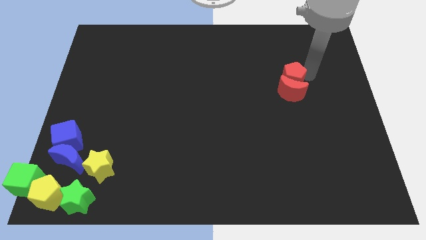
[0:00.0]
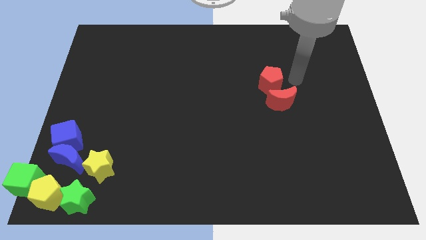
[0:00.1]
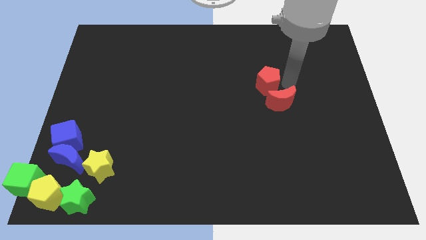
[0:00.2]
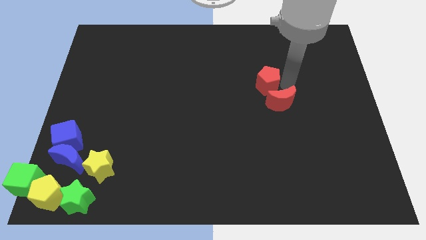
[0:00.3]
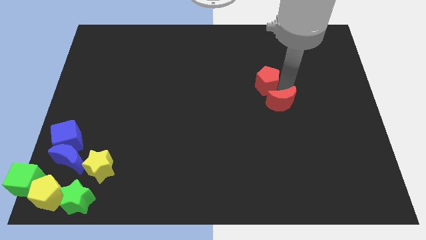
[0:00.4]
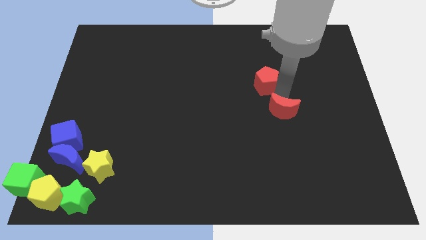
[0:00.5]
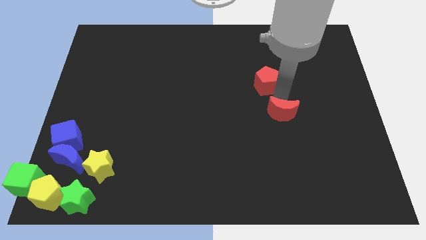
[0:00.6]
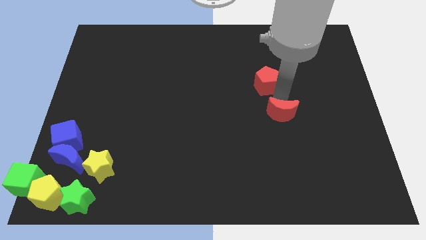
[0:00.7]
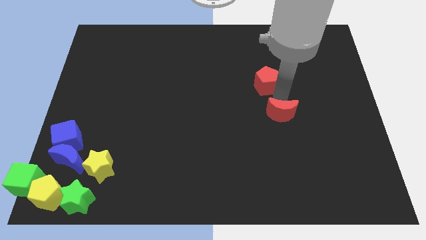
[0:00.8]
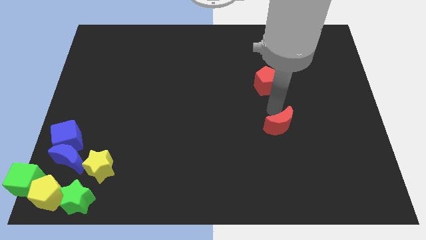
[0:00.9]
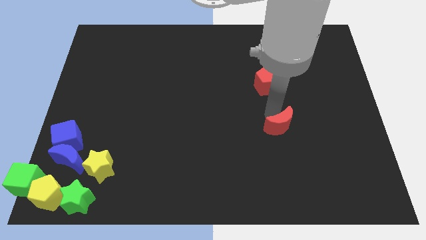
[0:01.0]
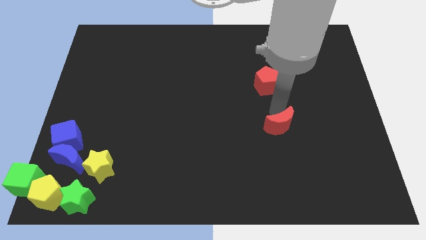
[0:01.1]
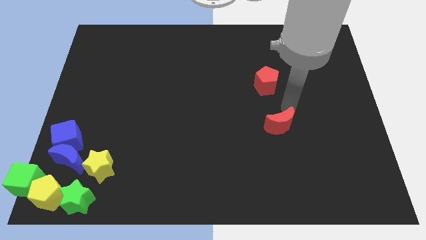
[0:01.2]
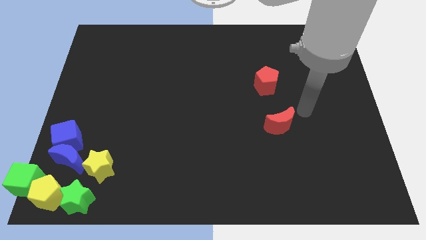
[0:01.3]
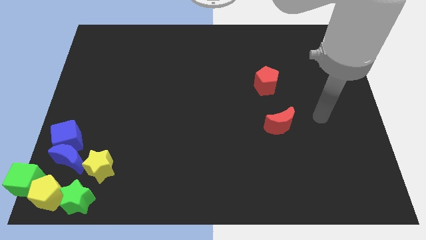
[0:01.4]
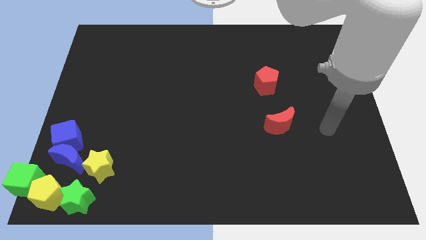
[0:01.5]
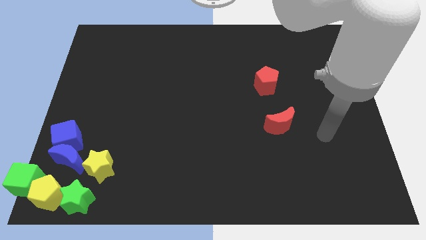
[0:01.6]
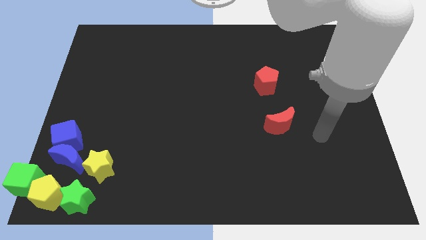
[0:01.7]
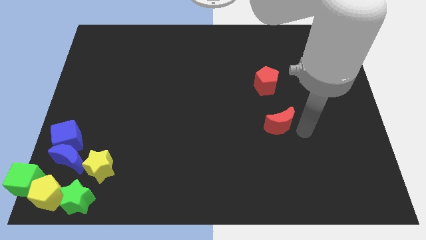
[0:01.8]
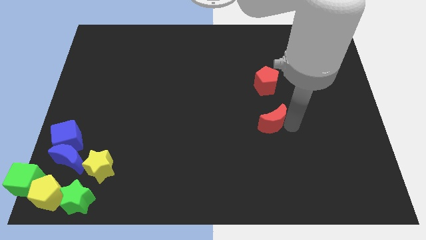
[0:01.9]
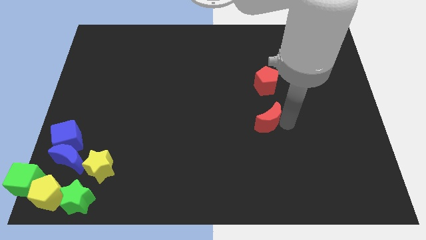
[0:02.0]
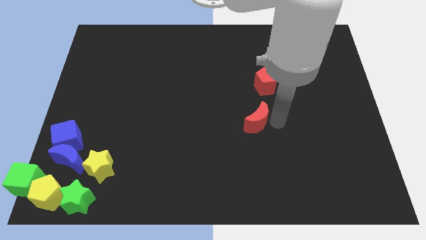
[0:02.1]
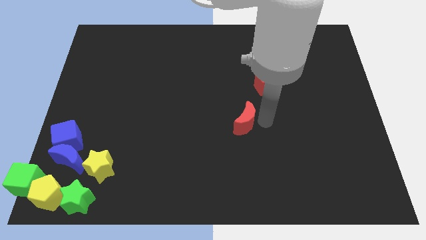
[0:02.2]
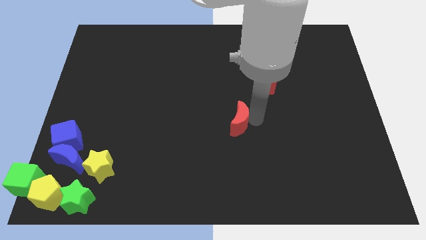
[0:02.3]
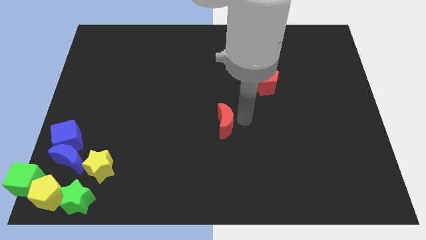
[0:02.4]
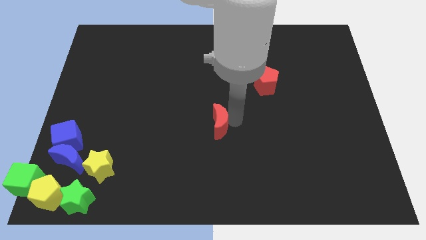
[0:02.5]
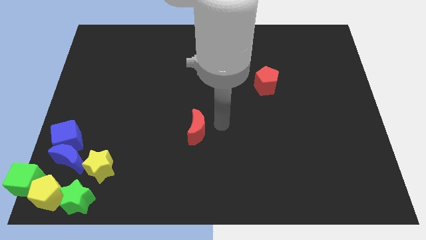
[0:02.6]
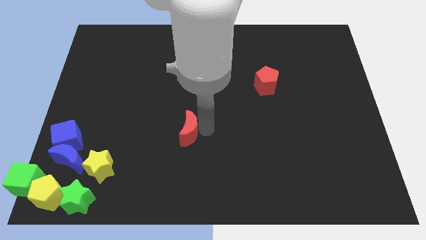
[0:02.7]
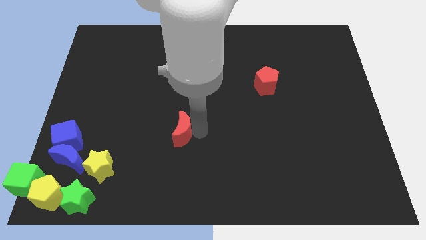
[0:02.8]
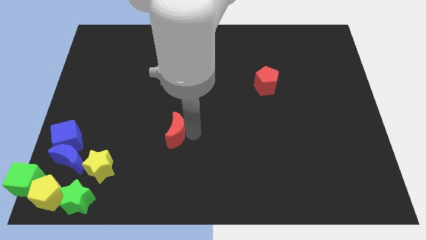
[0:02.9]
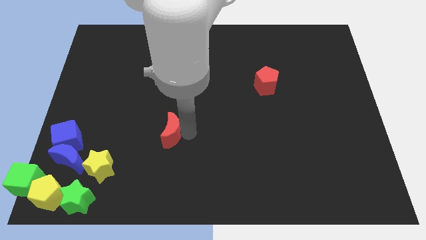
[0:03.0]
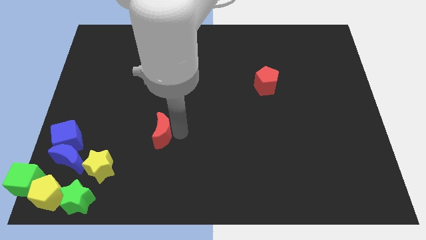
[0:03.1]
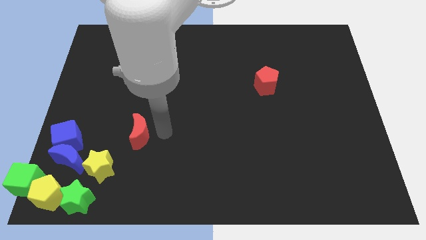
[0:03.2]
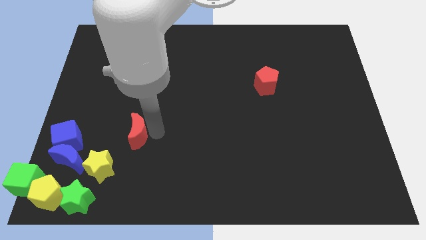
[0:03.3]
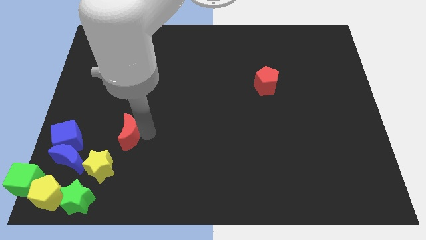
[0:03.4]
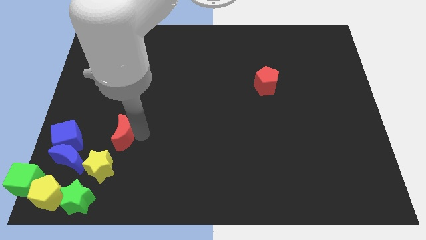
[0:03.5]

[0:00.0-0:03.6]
push the red crescent towards the group of blocks

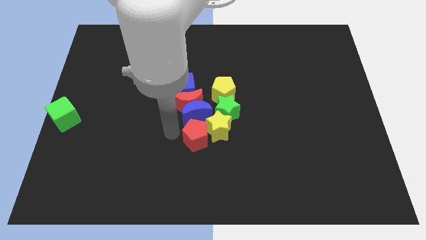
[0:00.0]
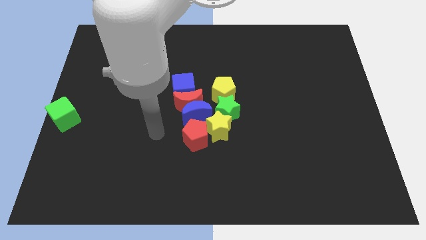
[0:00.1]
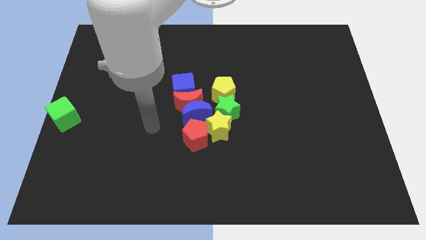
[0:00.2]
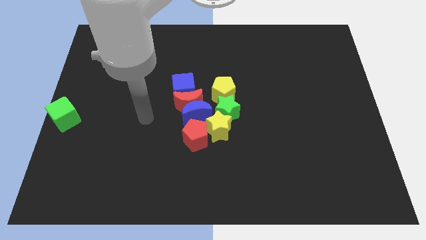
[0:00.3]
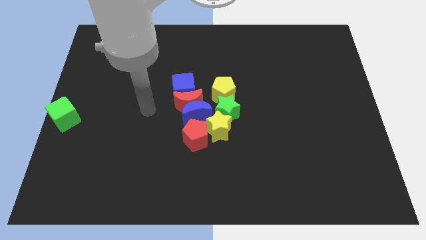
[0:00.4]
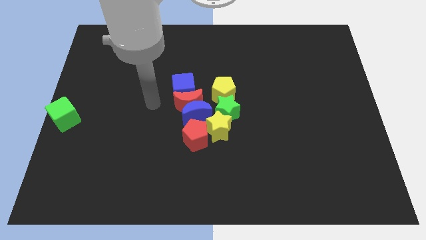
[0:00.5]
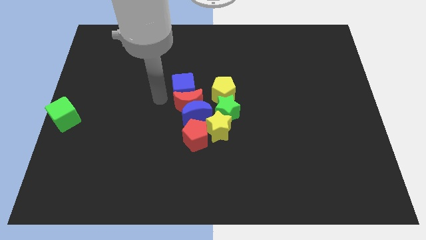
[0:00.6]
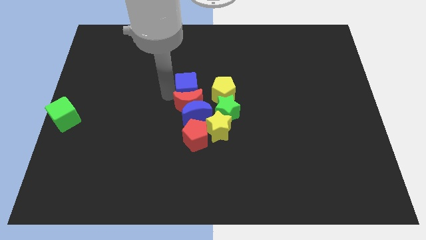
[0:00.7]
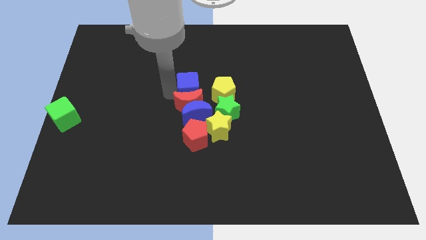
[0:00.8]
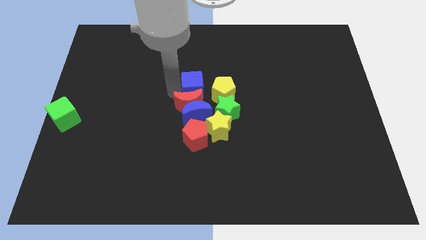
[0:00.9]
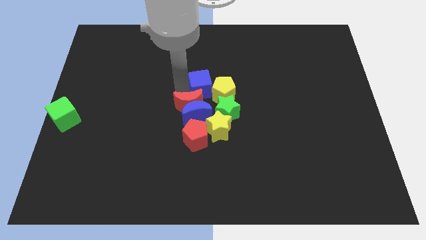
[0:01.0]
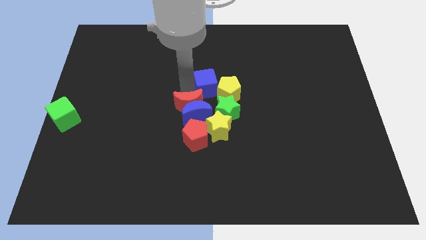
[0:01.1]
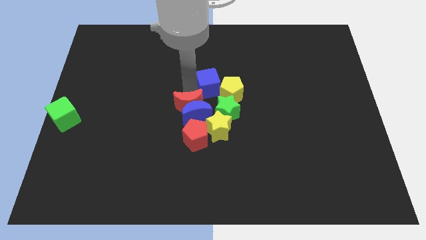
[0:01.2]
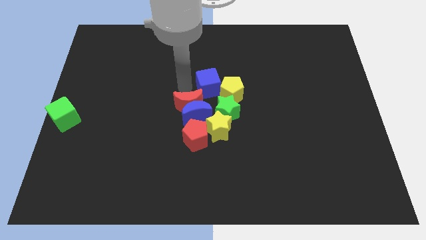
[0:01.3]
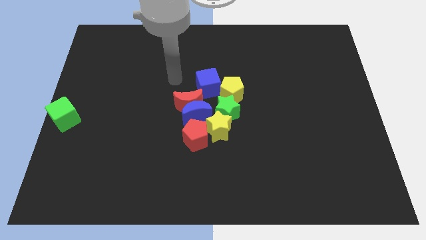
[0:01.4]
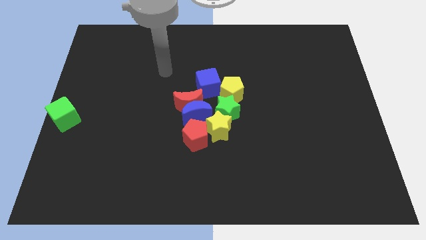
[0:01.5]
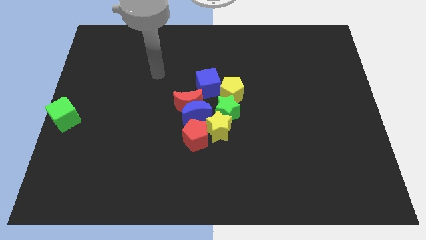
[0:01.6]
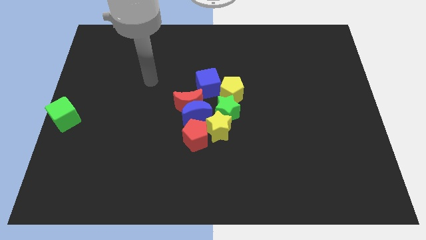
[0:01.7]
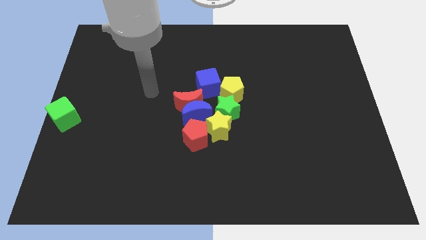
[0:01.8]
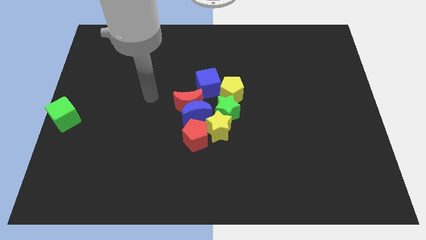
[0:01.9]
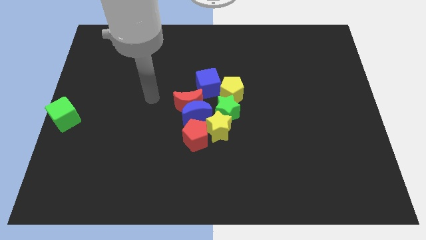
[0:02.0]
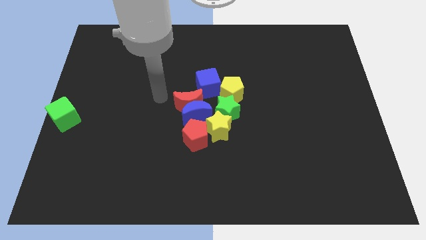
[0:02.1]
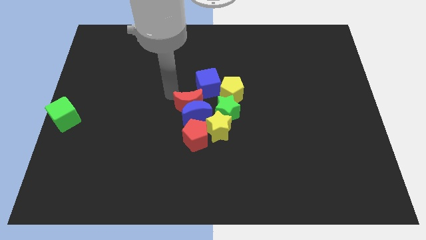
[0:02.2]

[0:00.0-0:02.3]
move the blue cube into the yellow pentagon

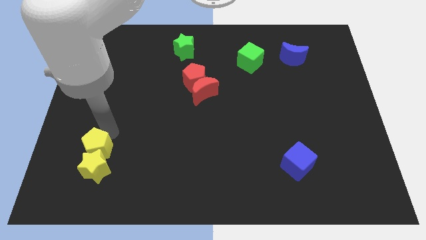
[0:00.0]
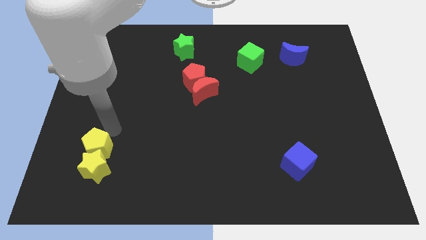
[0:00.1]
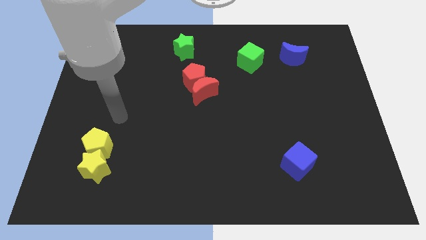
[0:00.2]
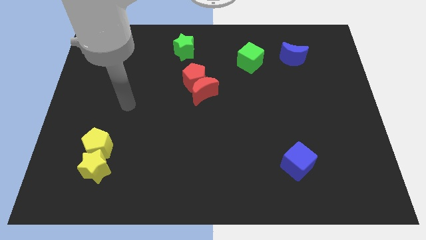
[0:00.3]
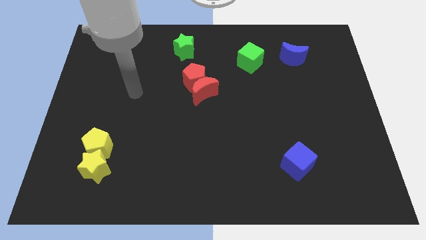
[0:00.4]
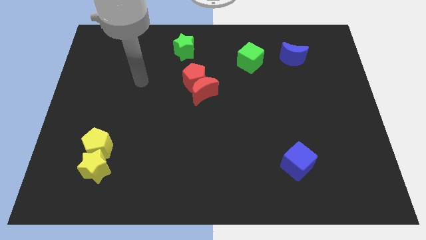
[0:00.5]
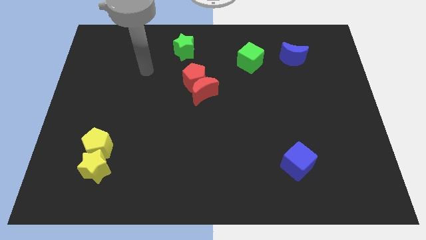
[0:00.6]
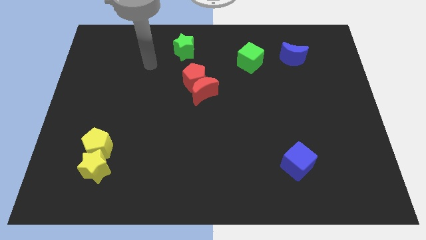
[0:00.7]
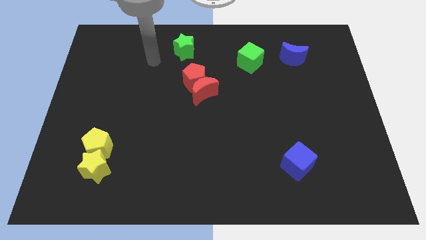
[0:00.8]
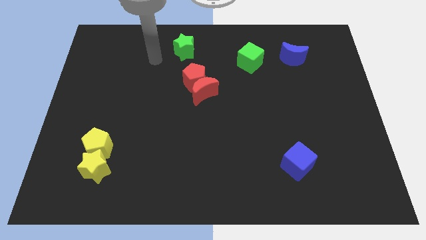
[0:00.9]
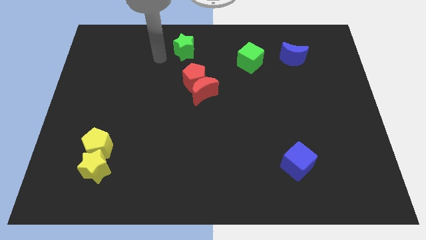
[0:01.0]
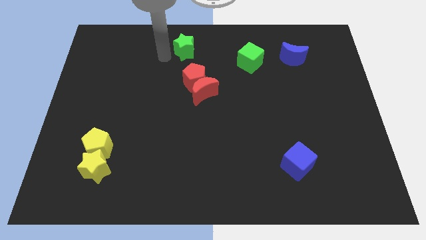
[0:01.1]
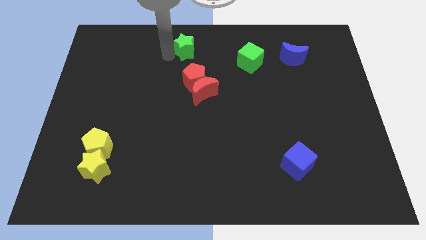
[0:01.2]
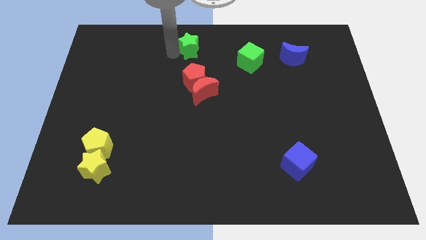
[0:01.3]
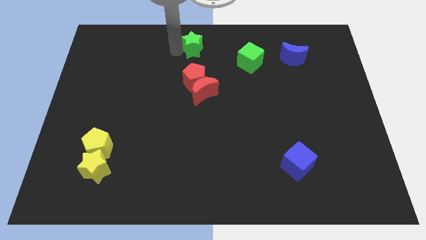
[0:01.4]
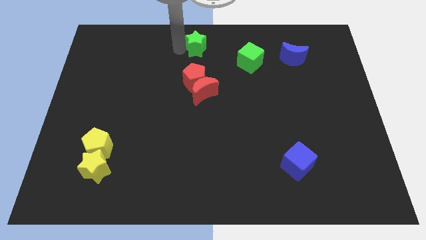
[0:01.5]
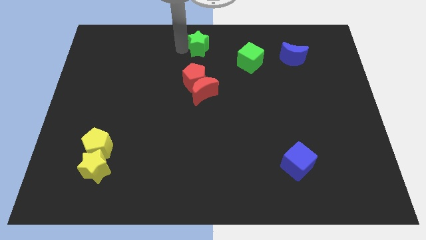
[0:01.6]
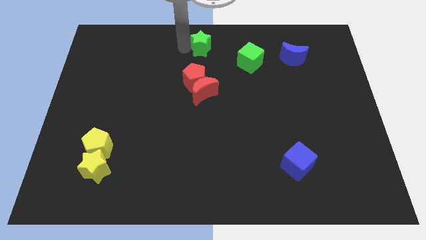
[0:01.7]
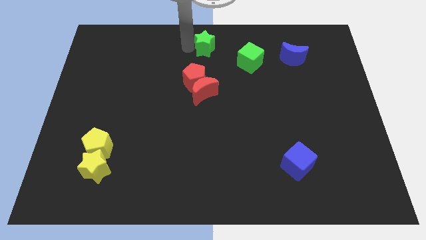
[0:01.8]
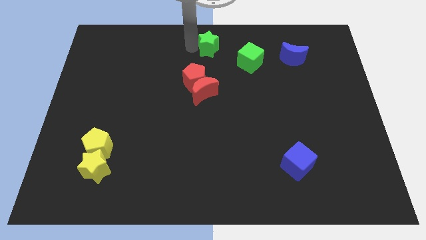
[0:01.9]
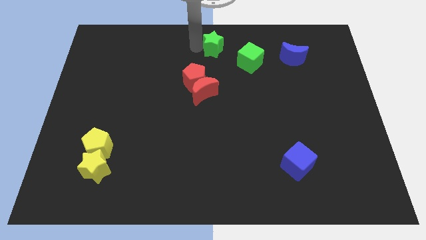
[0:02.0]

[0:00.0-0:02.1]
slide the green star to the top center of the board

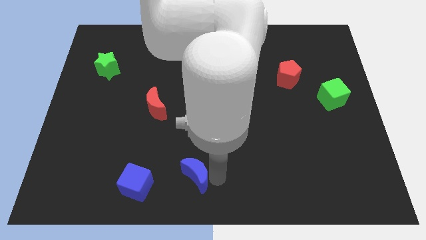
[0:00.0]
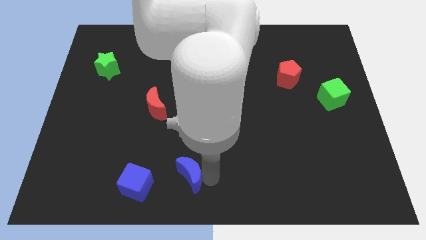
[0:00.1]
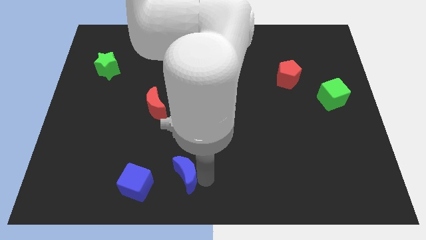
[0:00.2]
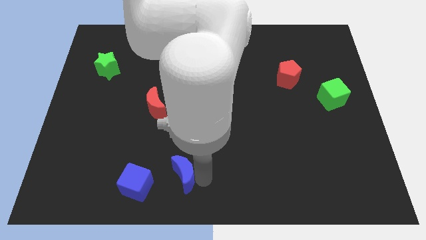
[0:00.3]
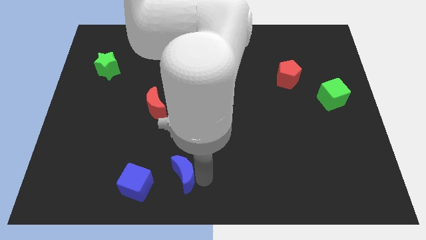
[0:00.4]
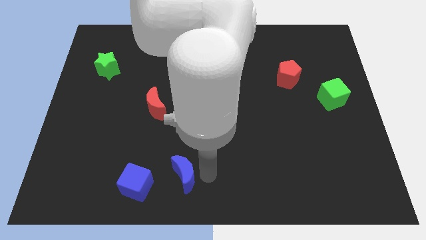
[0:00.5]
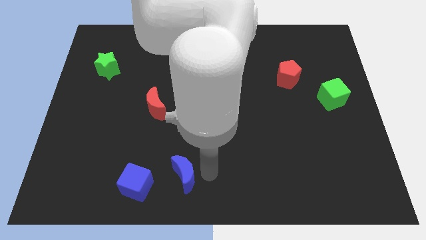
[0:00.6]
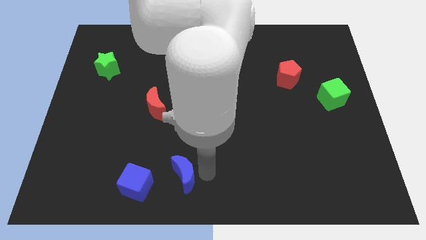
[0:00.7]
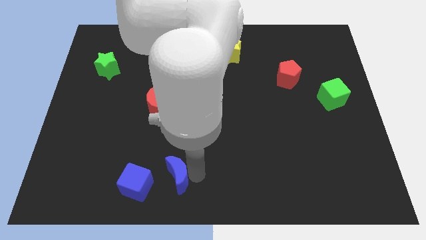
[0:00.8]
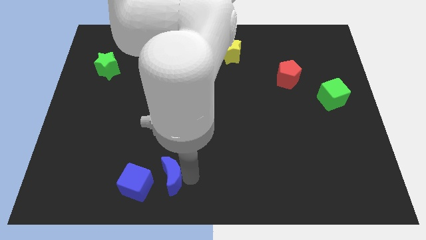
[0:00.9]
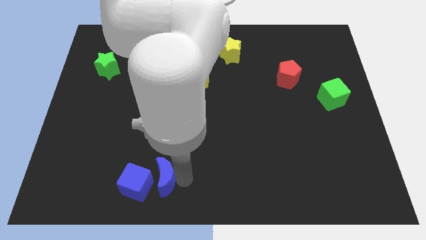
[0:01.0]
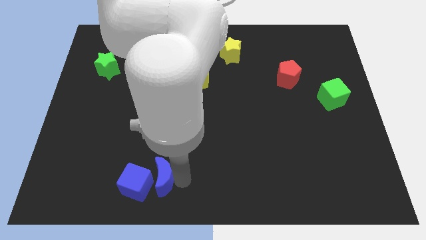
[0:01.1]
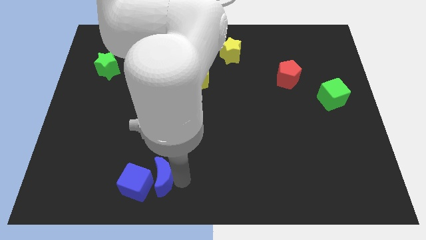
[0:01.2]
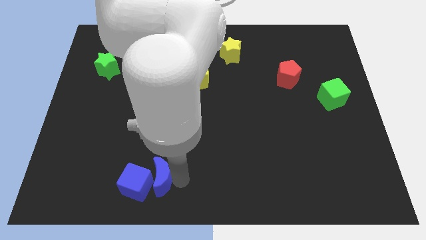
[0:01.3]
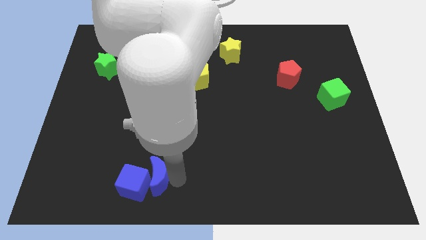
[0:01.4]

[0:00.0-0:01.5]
move the blue crescent into the blue cube
